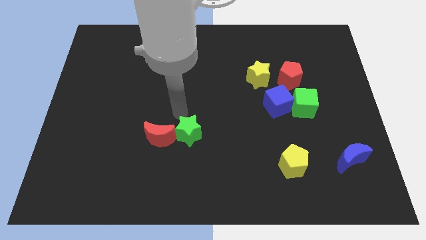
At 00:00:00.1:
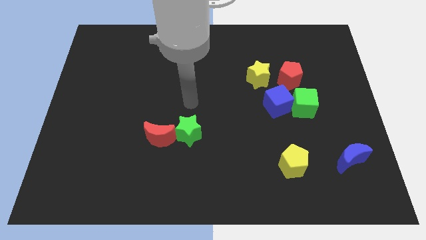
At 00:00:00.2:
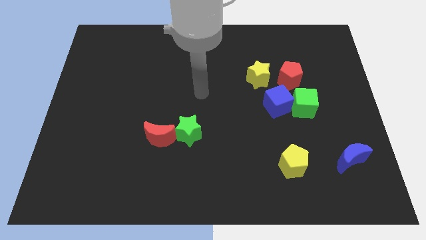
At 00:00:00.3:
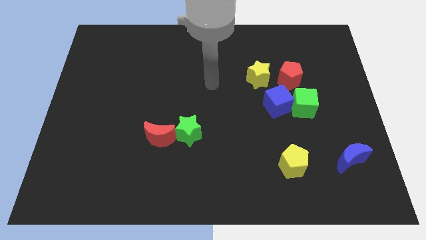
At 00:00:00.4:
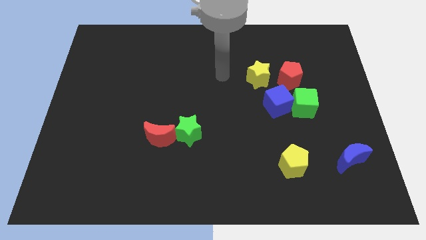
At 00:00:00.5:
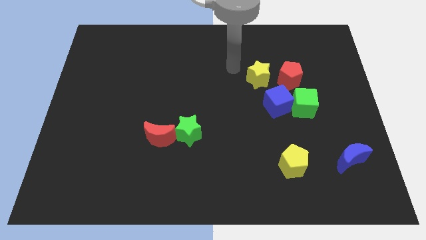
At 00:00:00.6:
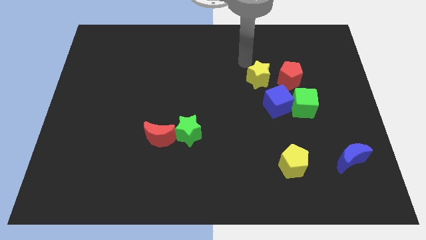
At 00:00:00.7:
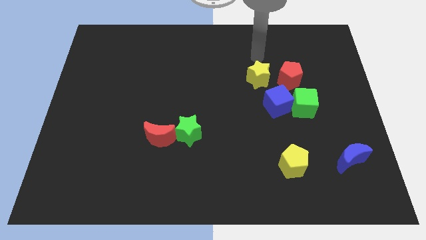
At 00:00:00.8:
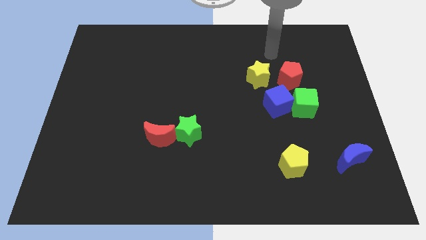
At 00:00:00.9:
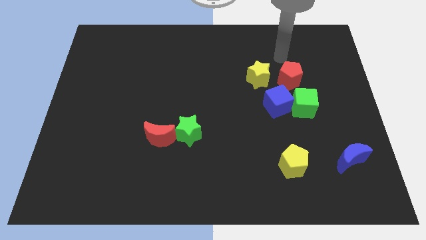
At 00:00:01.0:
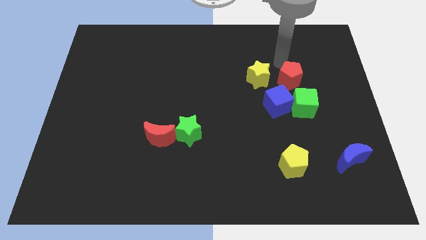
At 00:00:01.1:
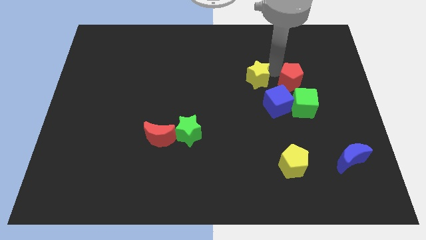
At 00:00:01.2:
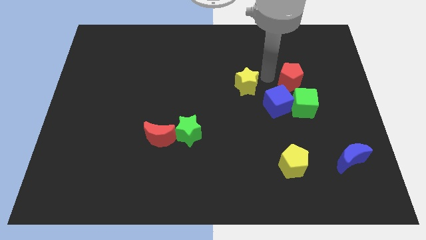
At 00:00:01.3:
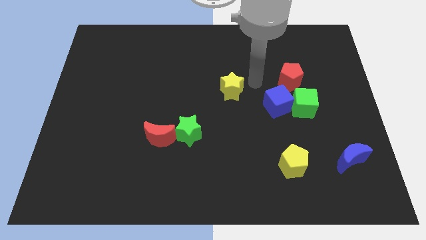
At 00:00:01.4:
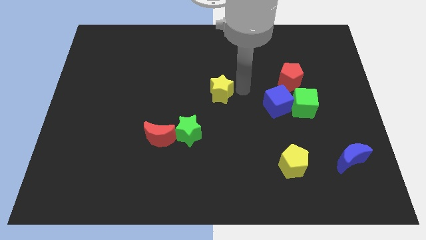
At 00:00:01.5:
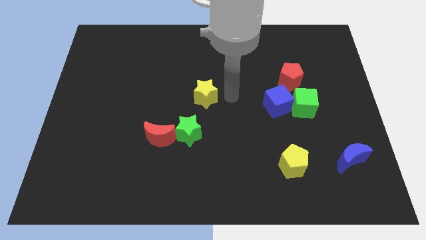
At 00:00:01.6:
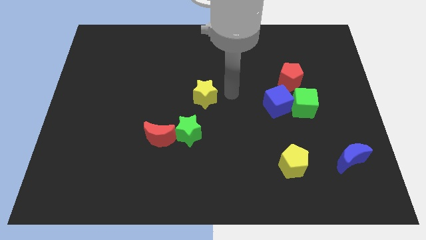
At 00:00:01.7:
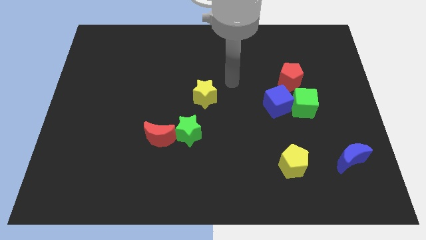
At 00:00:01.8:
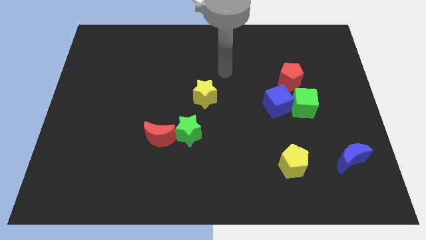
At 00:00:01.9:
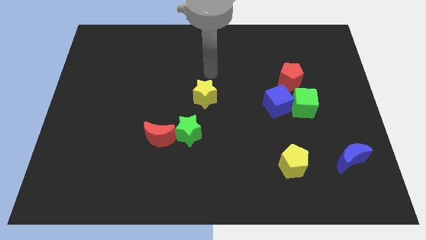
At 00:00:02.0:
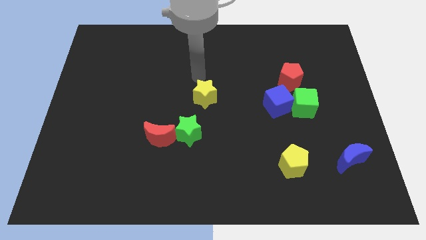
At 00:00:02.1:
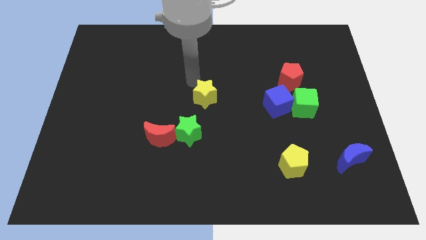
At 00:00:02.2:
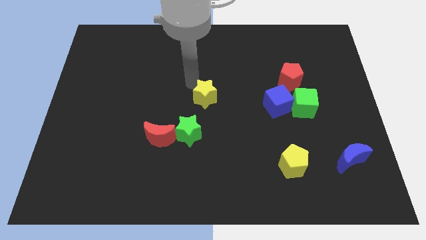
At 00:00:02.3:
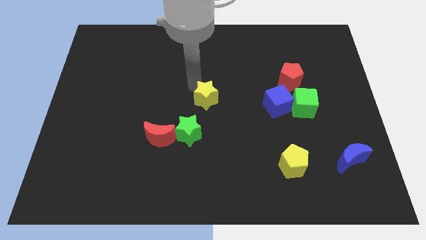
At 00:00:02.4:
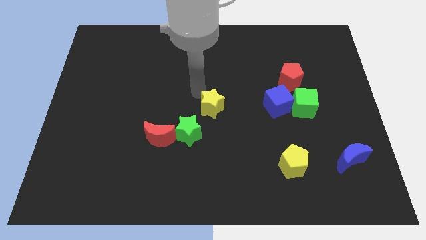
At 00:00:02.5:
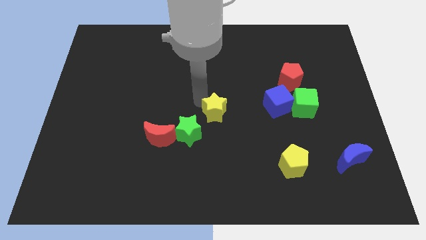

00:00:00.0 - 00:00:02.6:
move the yellow star to the center of the board

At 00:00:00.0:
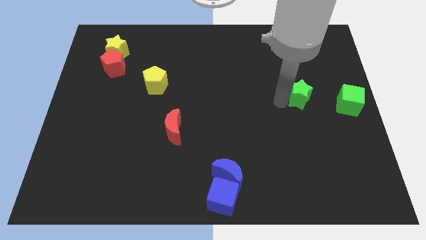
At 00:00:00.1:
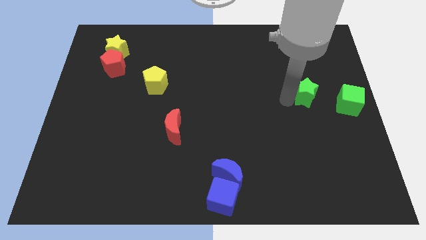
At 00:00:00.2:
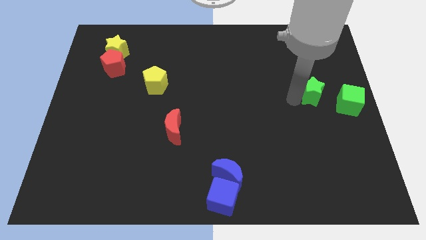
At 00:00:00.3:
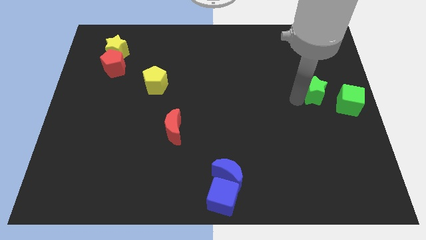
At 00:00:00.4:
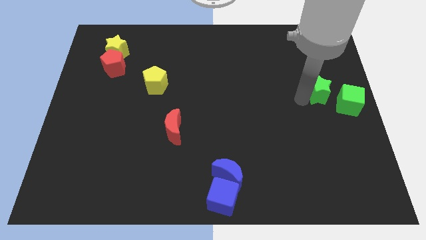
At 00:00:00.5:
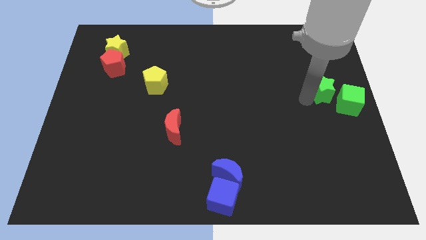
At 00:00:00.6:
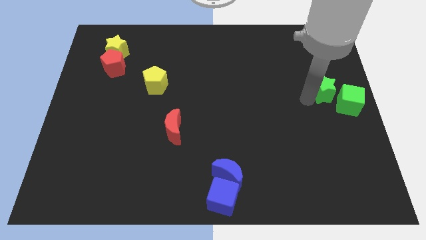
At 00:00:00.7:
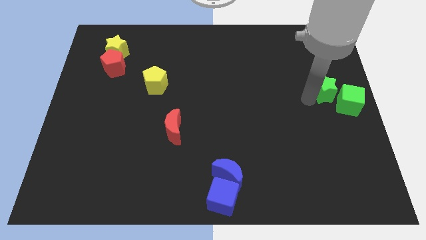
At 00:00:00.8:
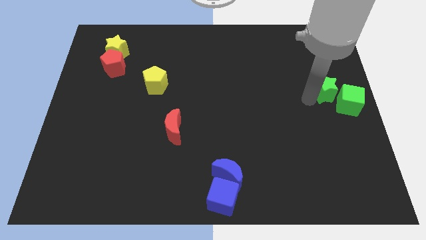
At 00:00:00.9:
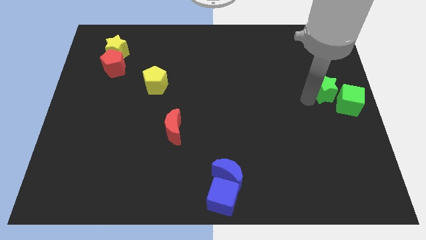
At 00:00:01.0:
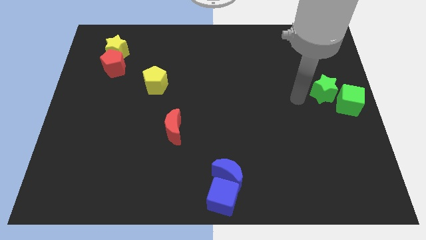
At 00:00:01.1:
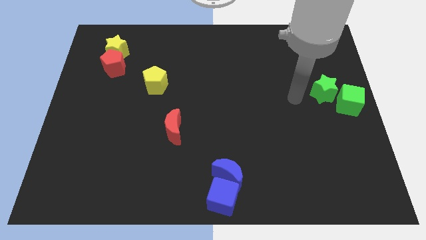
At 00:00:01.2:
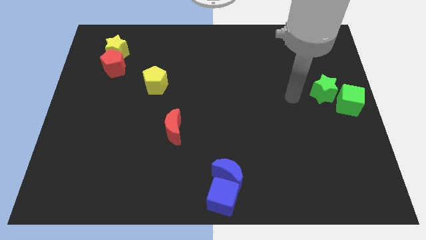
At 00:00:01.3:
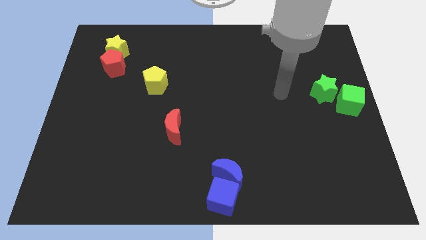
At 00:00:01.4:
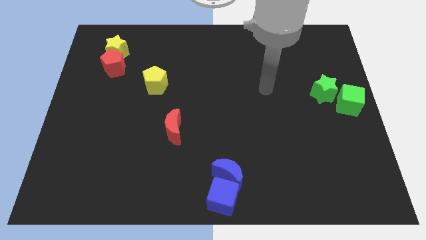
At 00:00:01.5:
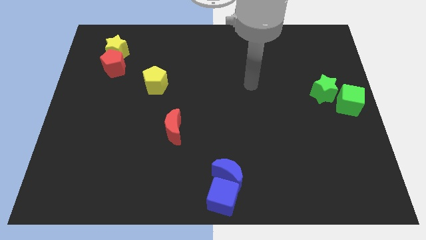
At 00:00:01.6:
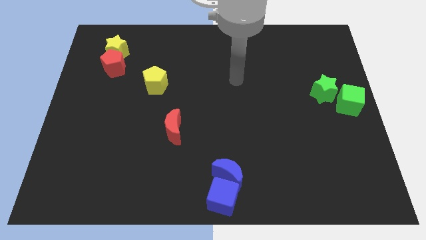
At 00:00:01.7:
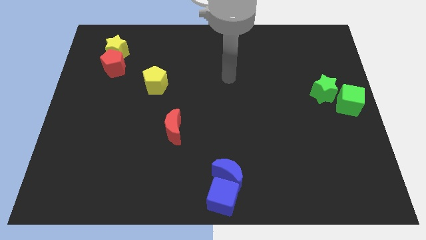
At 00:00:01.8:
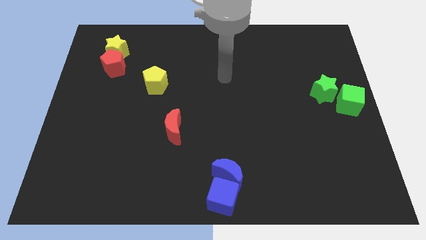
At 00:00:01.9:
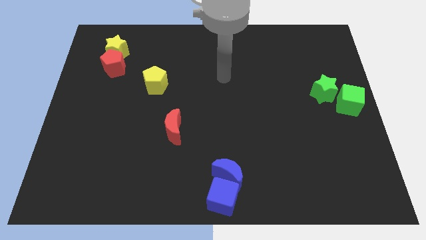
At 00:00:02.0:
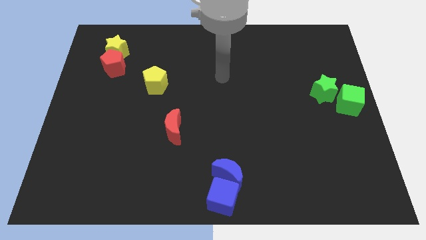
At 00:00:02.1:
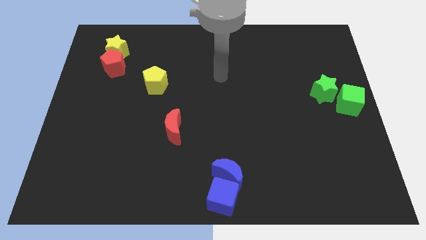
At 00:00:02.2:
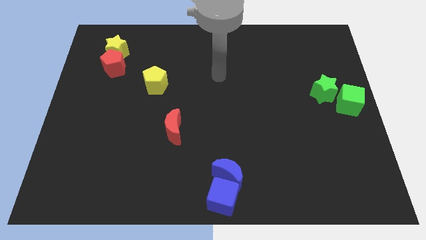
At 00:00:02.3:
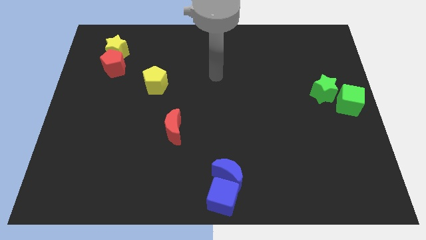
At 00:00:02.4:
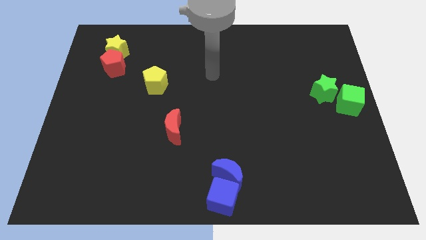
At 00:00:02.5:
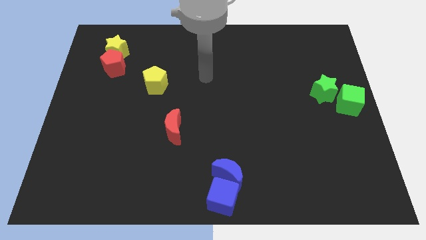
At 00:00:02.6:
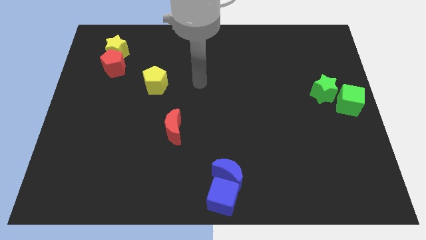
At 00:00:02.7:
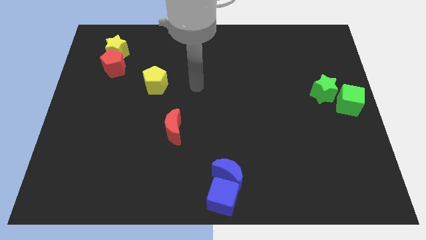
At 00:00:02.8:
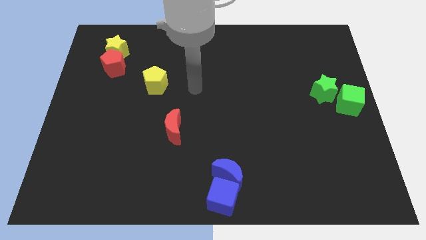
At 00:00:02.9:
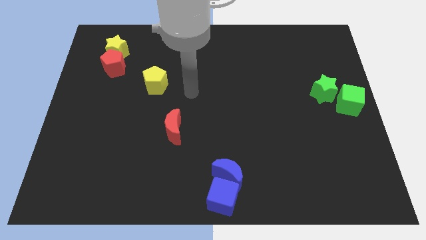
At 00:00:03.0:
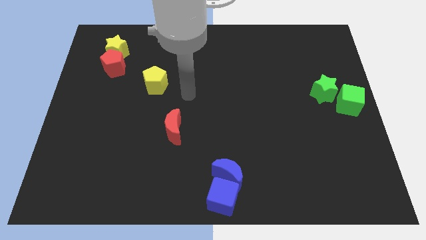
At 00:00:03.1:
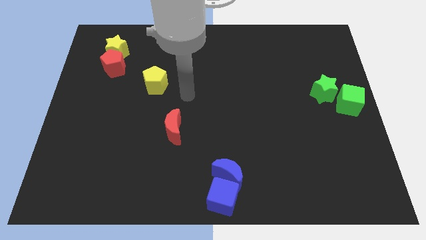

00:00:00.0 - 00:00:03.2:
place the green star close to the green cube

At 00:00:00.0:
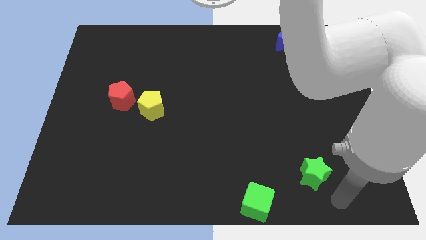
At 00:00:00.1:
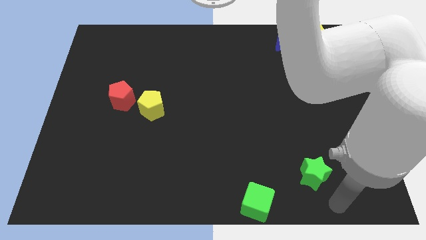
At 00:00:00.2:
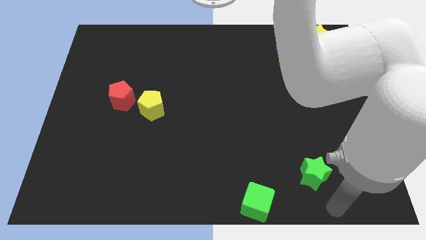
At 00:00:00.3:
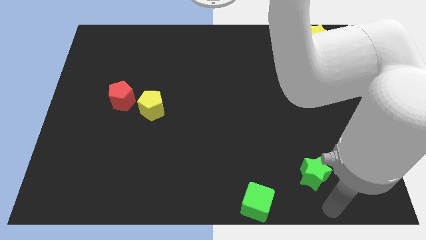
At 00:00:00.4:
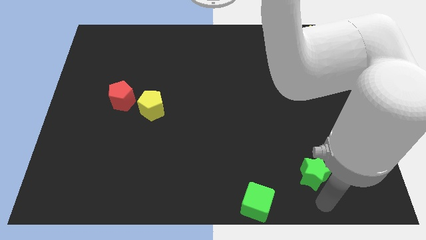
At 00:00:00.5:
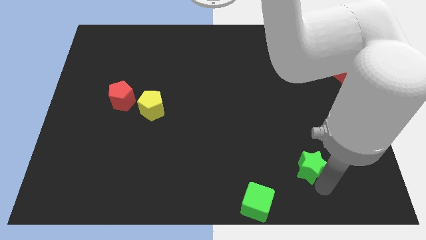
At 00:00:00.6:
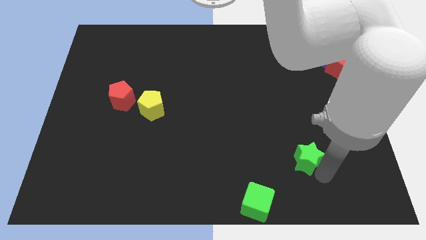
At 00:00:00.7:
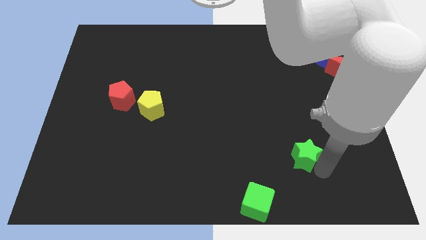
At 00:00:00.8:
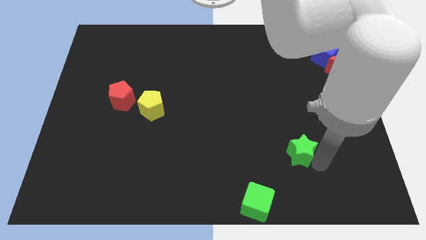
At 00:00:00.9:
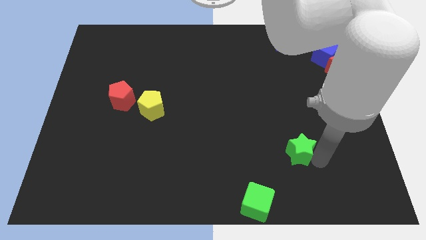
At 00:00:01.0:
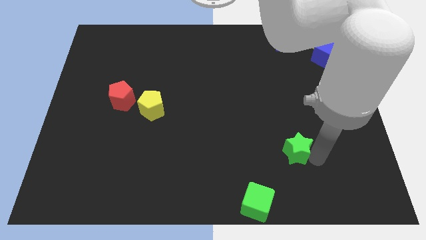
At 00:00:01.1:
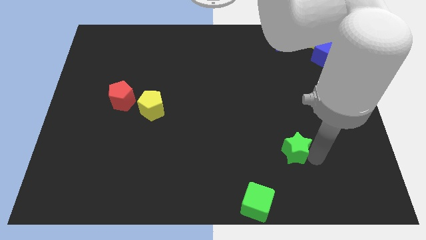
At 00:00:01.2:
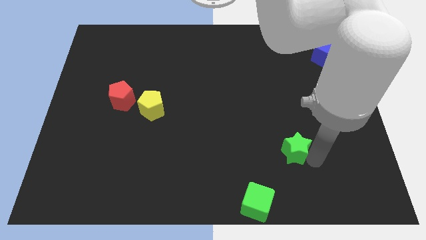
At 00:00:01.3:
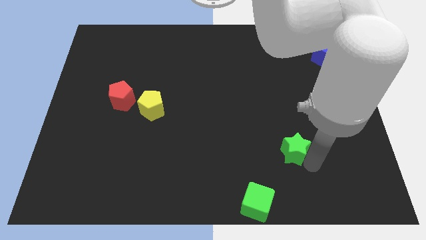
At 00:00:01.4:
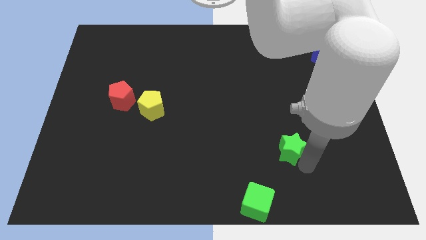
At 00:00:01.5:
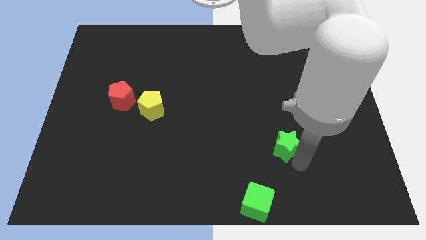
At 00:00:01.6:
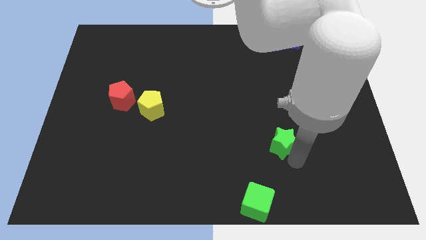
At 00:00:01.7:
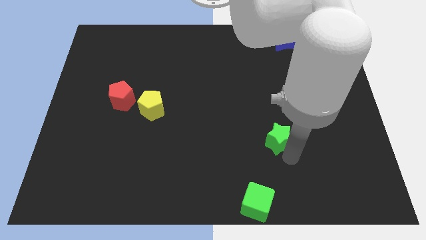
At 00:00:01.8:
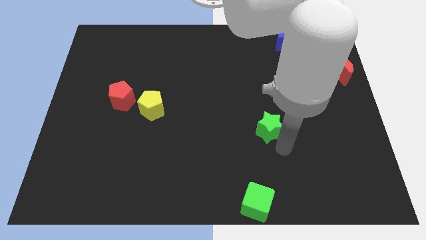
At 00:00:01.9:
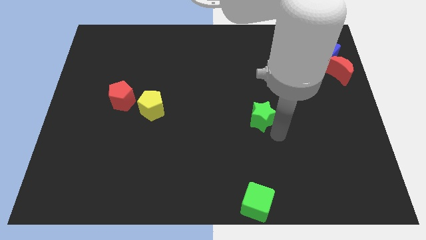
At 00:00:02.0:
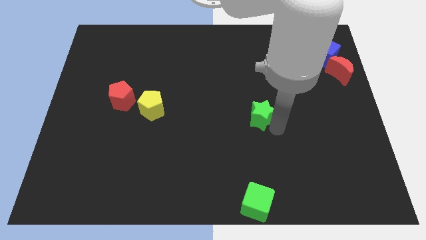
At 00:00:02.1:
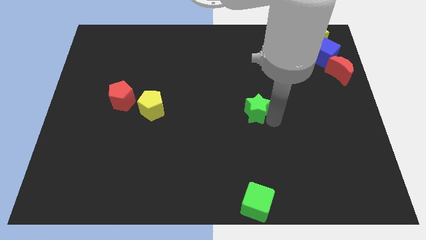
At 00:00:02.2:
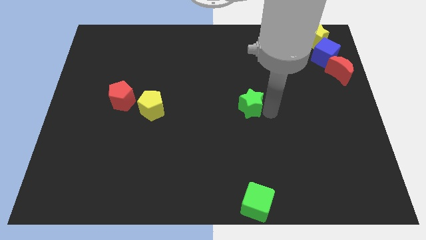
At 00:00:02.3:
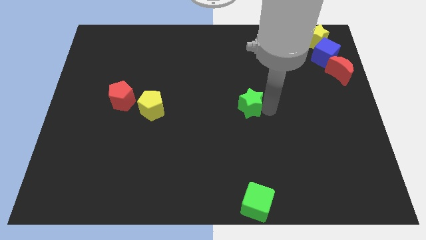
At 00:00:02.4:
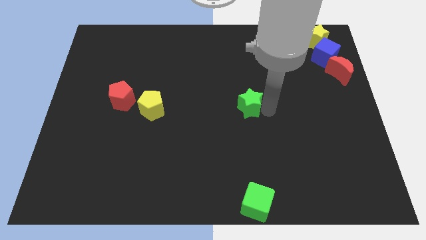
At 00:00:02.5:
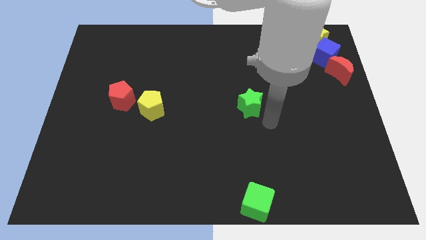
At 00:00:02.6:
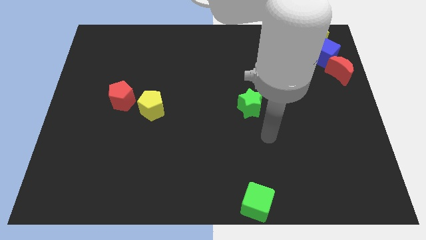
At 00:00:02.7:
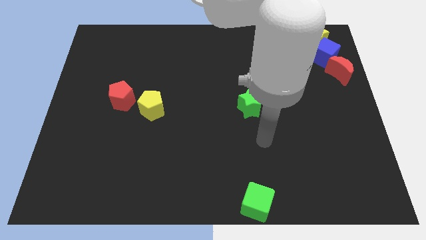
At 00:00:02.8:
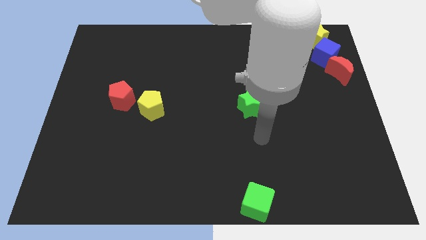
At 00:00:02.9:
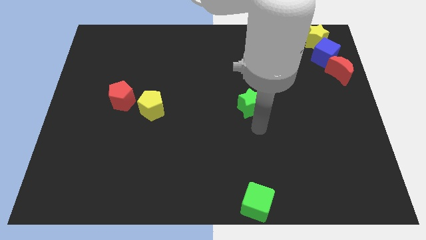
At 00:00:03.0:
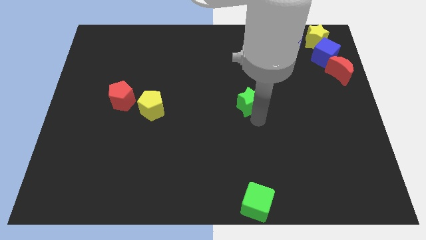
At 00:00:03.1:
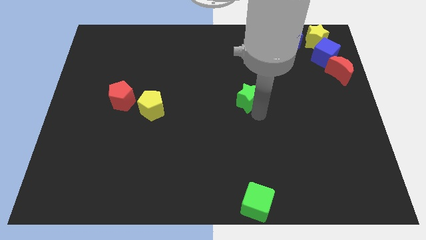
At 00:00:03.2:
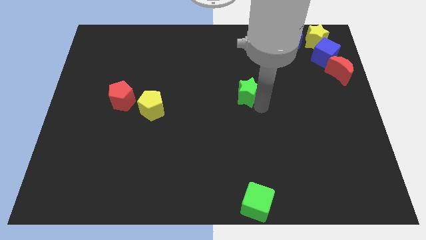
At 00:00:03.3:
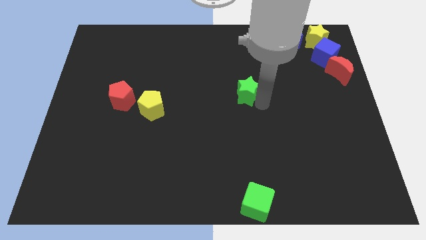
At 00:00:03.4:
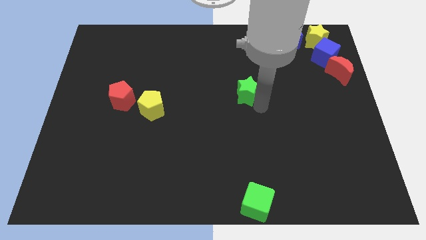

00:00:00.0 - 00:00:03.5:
drag the green star upwards parallel to the green cube
